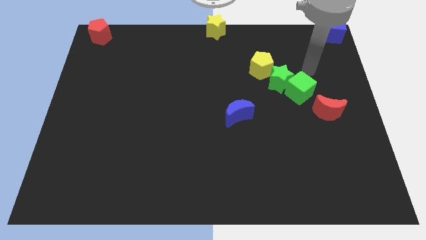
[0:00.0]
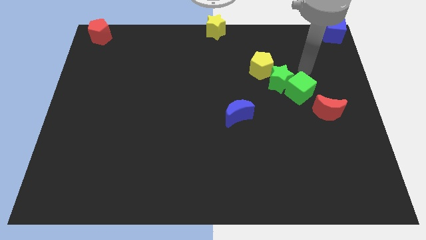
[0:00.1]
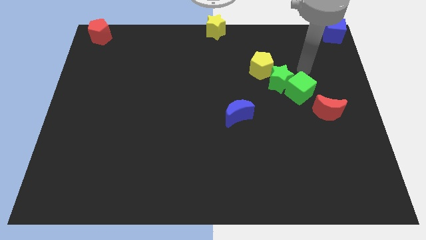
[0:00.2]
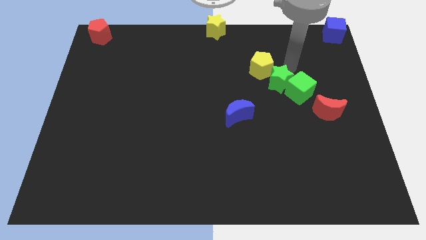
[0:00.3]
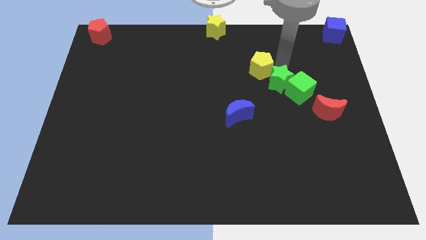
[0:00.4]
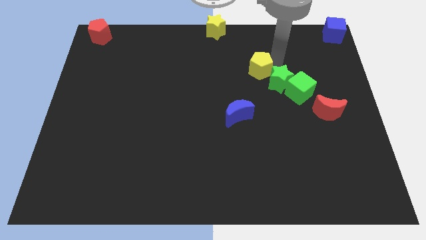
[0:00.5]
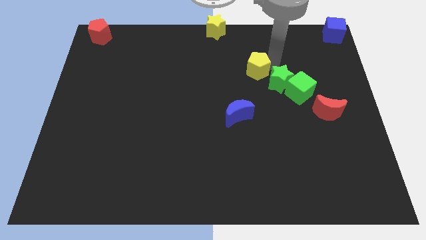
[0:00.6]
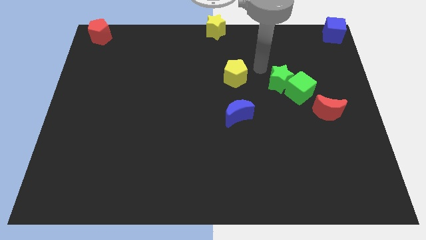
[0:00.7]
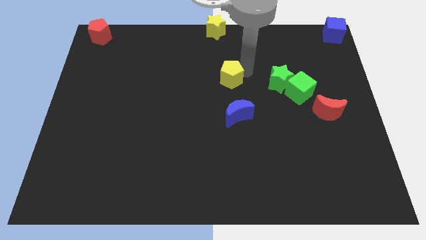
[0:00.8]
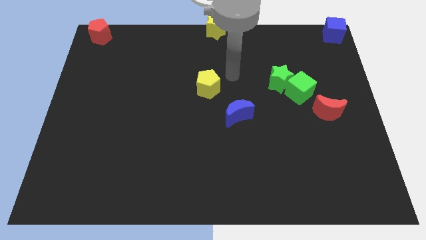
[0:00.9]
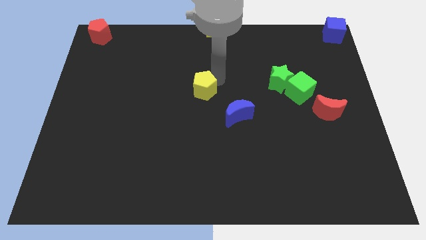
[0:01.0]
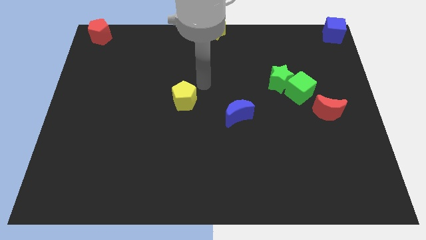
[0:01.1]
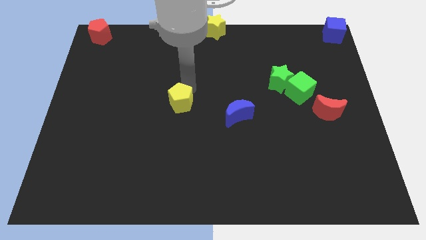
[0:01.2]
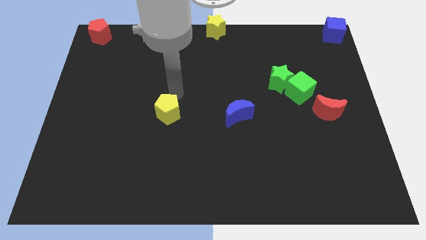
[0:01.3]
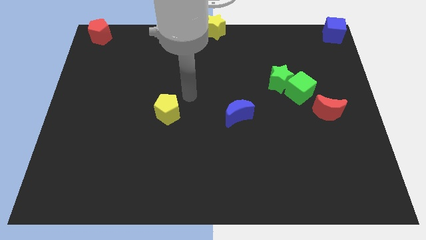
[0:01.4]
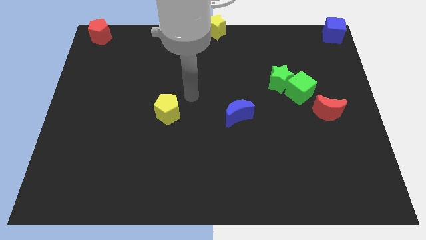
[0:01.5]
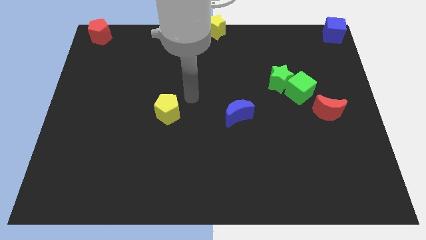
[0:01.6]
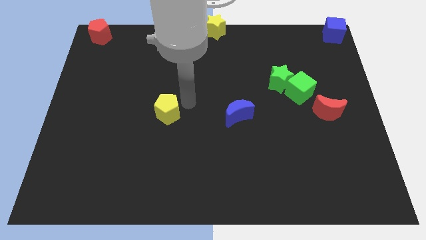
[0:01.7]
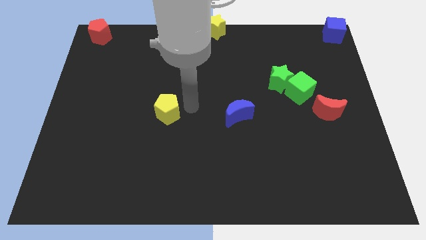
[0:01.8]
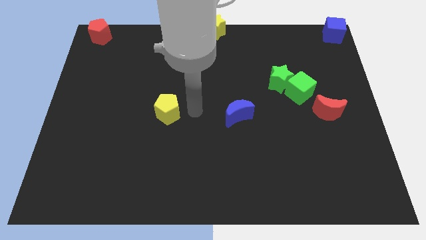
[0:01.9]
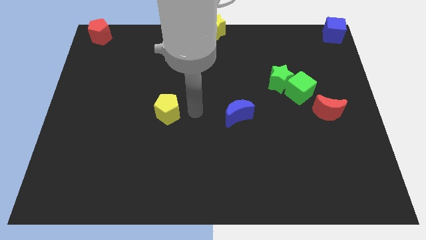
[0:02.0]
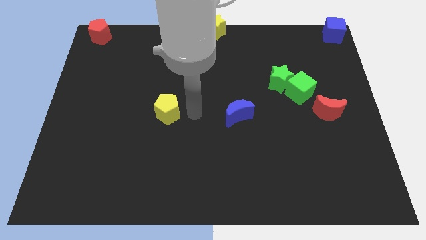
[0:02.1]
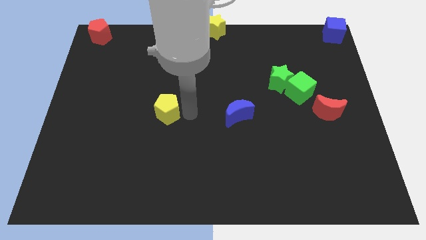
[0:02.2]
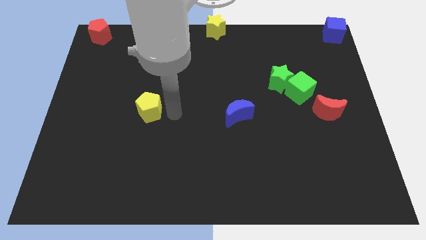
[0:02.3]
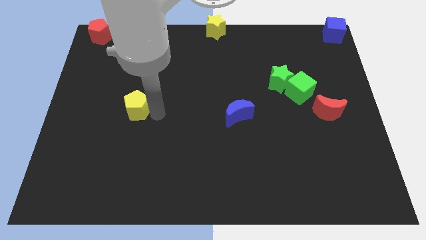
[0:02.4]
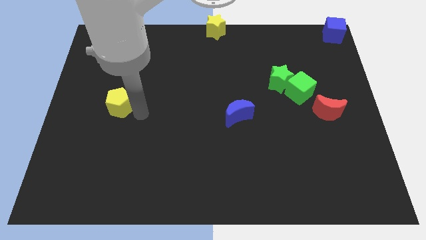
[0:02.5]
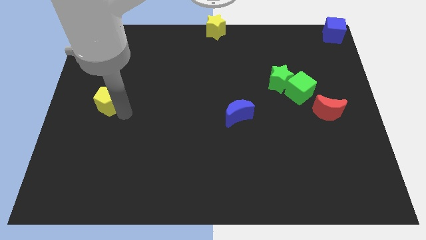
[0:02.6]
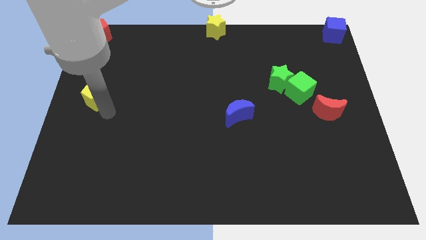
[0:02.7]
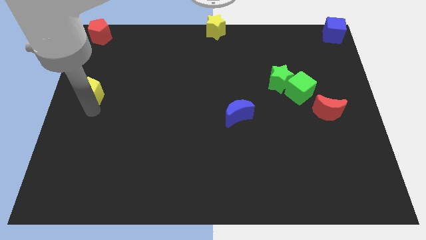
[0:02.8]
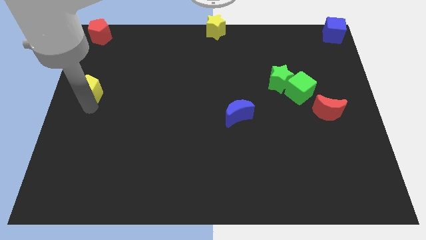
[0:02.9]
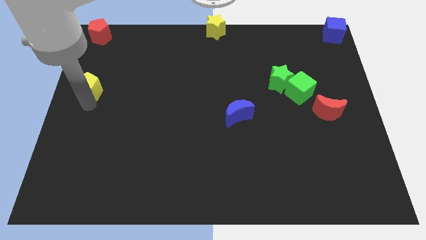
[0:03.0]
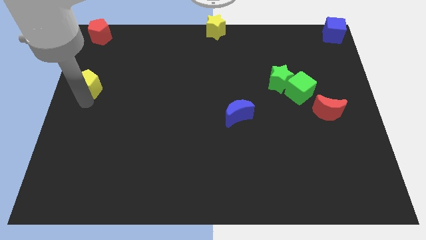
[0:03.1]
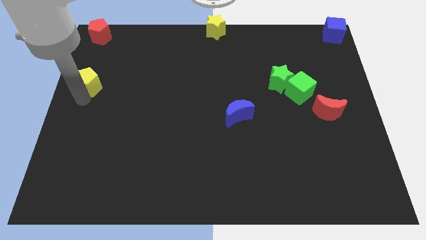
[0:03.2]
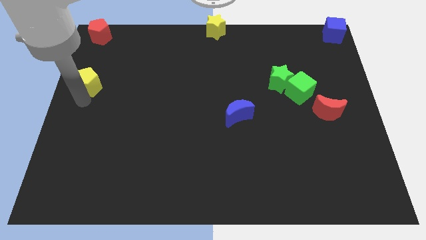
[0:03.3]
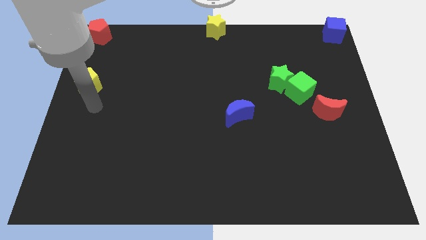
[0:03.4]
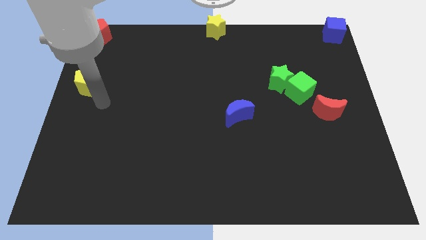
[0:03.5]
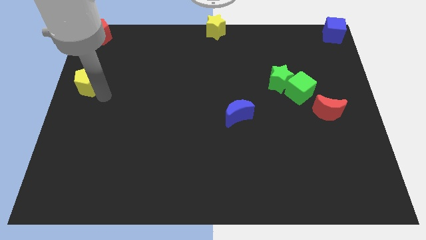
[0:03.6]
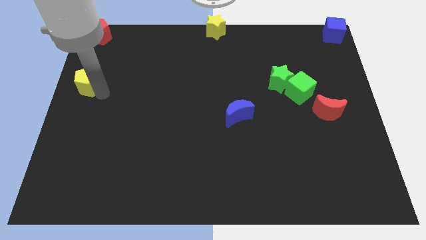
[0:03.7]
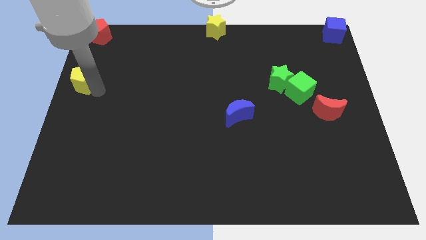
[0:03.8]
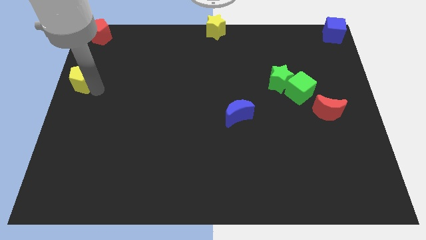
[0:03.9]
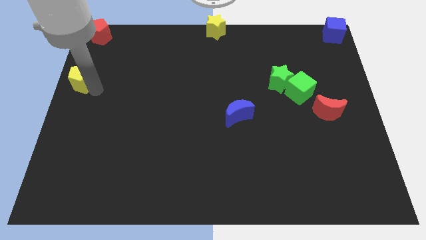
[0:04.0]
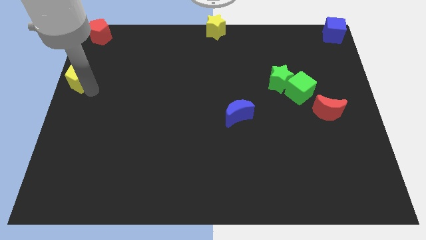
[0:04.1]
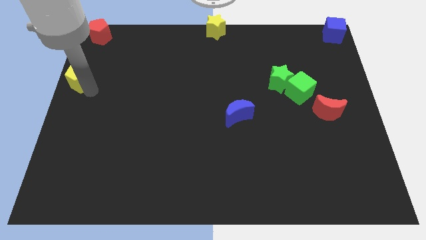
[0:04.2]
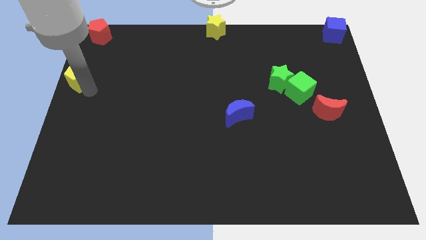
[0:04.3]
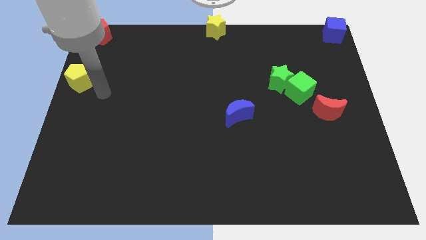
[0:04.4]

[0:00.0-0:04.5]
push the yellow pentagon to the vertical bottom side of the red pentagon

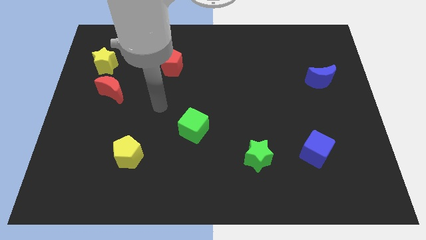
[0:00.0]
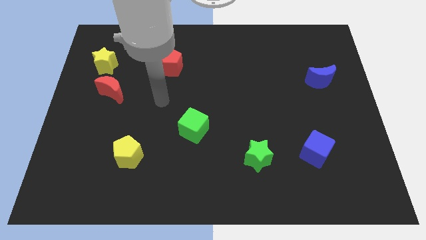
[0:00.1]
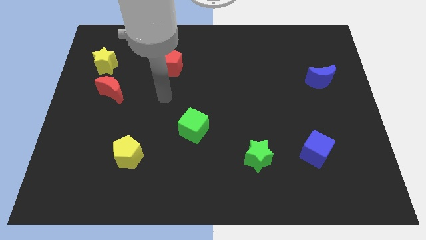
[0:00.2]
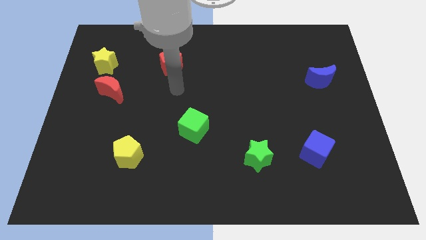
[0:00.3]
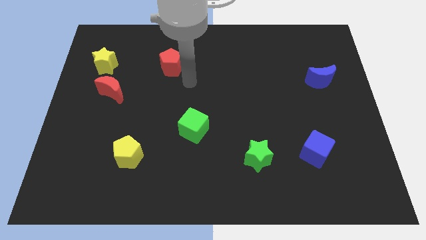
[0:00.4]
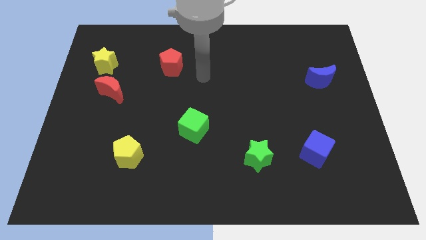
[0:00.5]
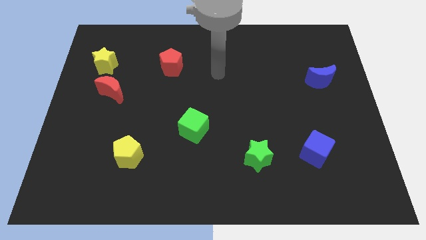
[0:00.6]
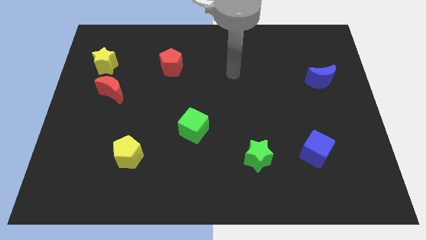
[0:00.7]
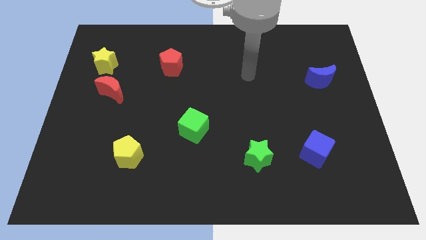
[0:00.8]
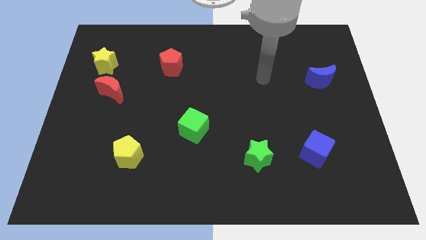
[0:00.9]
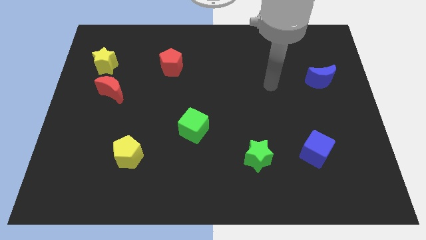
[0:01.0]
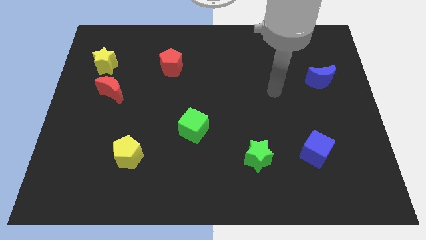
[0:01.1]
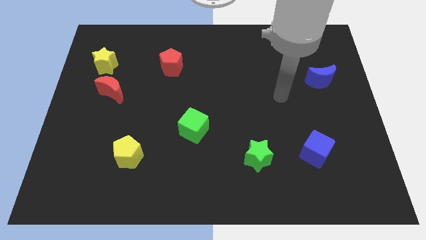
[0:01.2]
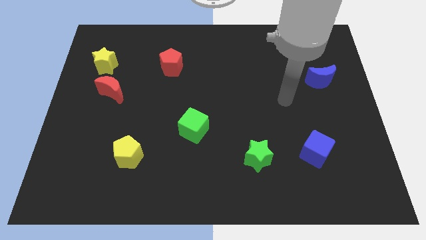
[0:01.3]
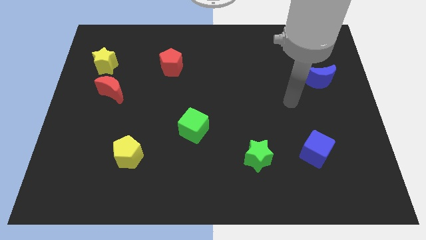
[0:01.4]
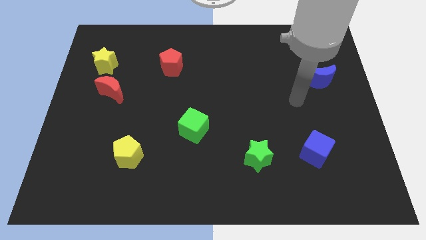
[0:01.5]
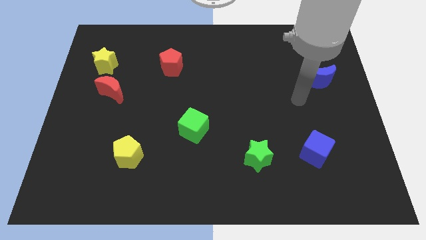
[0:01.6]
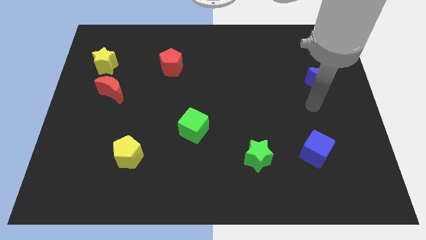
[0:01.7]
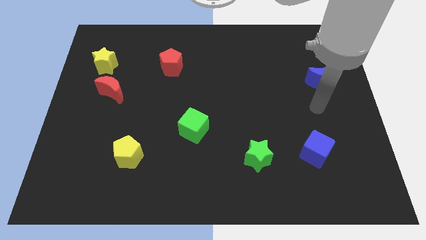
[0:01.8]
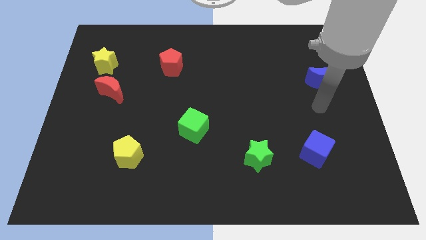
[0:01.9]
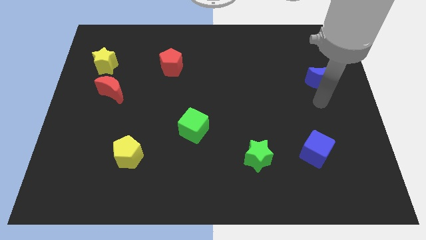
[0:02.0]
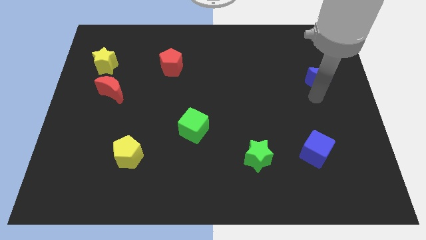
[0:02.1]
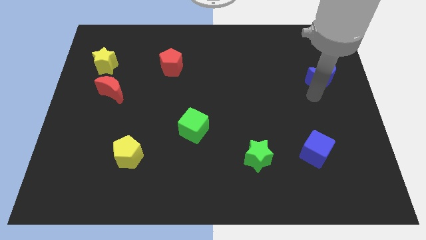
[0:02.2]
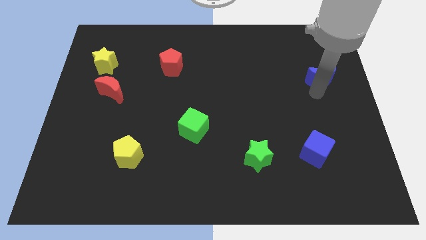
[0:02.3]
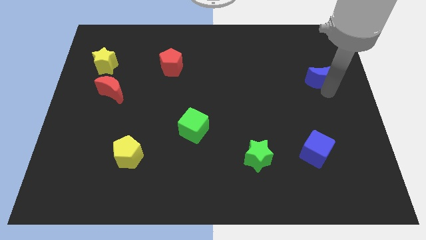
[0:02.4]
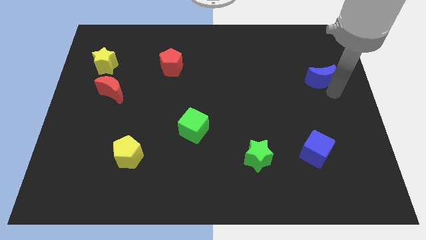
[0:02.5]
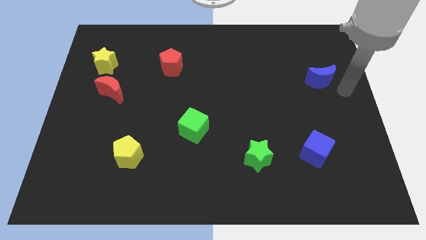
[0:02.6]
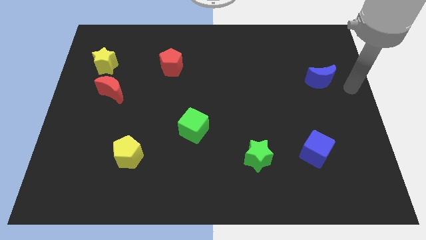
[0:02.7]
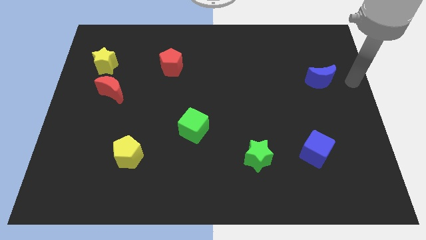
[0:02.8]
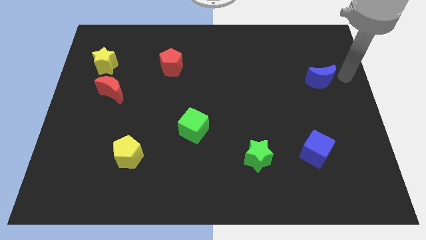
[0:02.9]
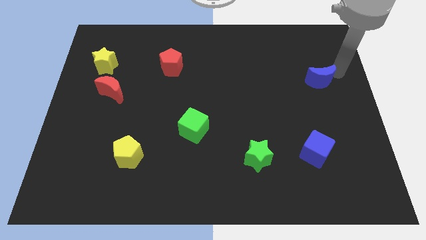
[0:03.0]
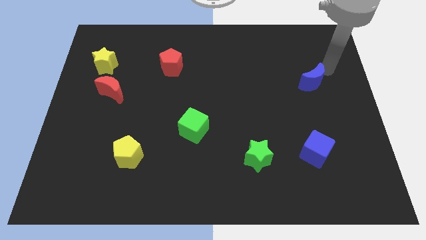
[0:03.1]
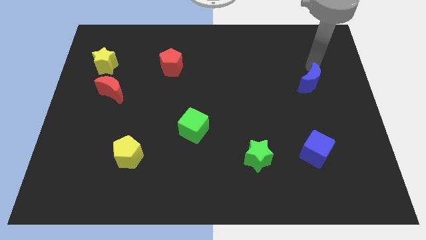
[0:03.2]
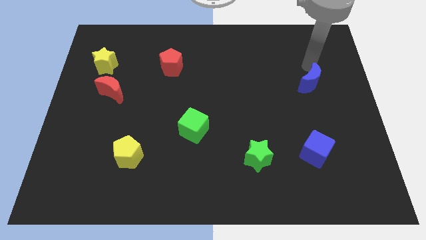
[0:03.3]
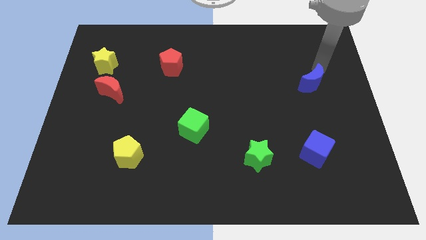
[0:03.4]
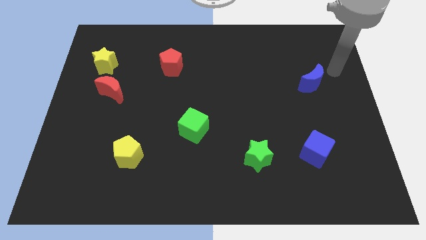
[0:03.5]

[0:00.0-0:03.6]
put the blue moon vertically above the blue cube

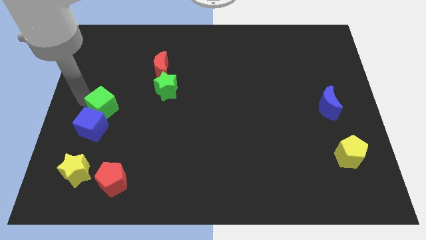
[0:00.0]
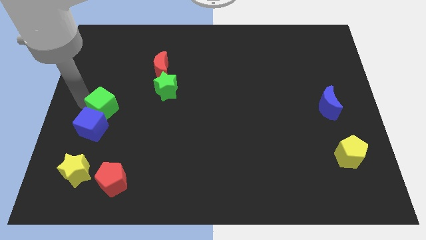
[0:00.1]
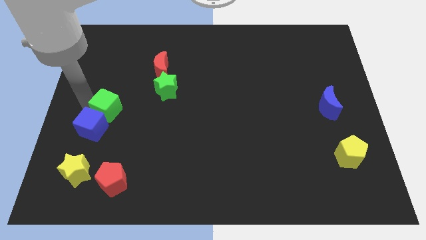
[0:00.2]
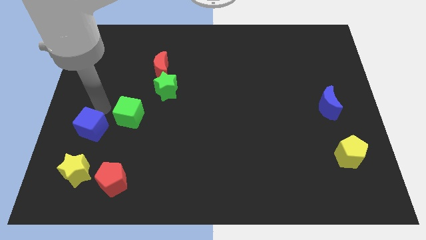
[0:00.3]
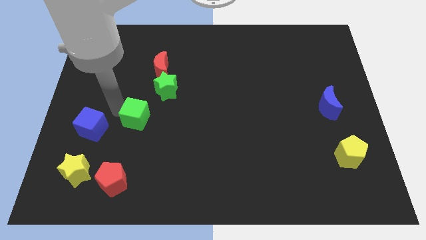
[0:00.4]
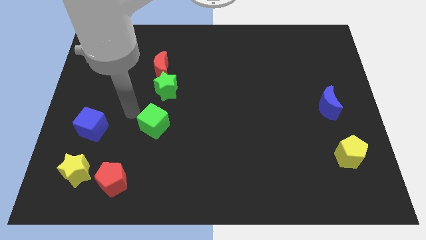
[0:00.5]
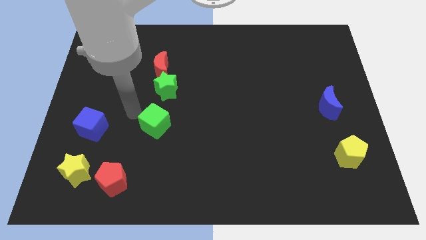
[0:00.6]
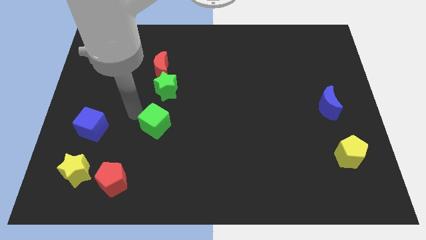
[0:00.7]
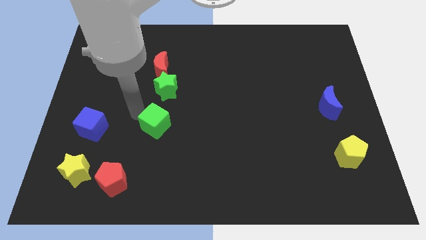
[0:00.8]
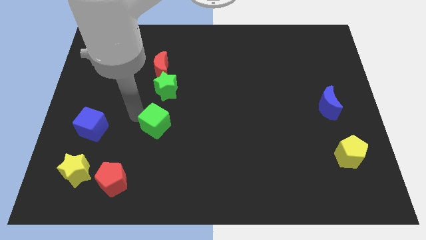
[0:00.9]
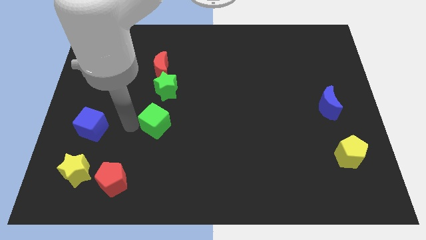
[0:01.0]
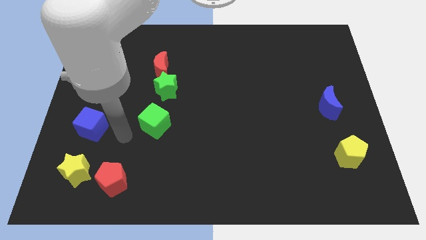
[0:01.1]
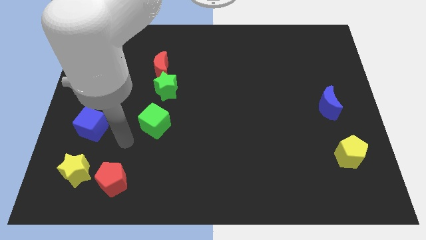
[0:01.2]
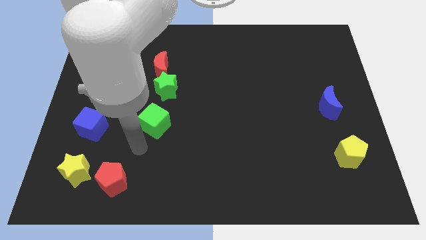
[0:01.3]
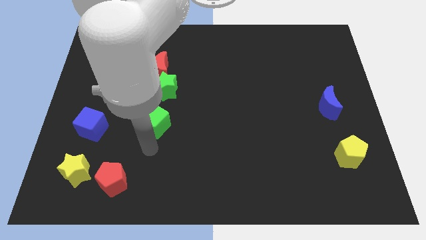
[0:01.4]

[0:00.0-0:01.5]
push the green cube towards the bottom of green star
